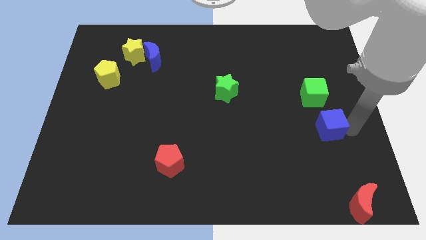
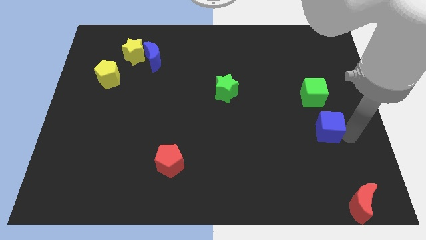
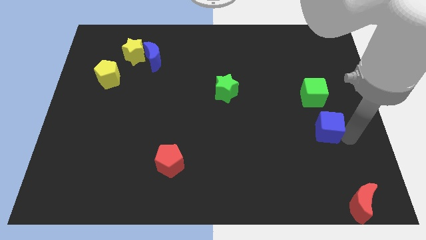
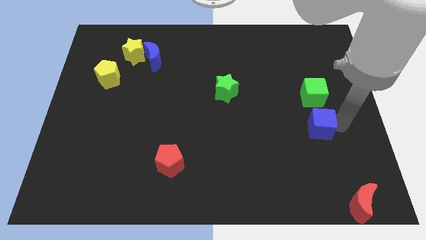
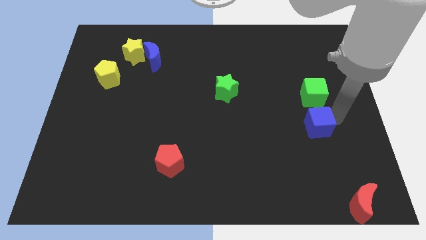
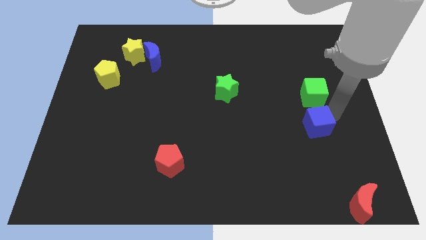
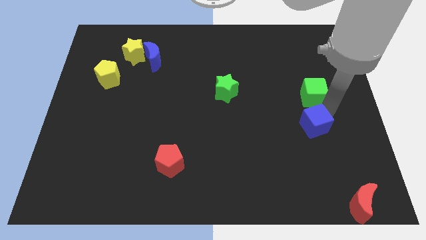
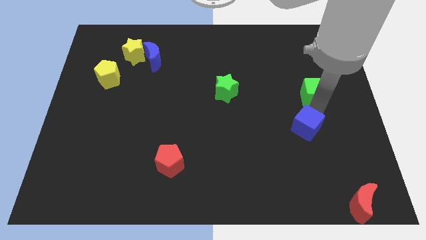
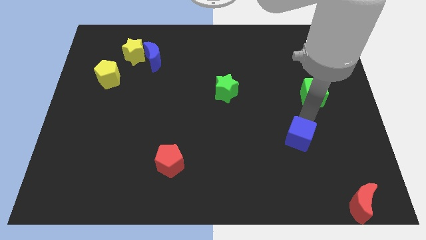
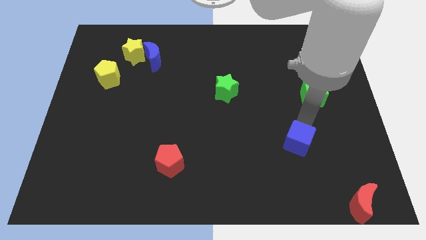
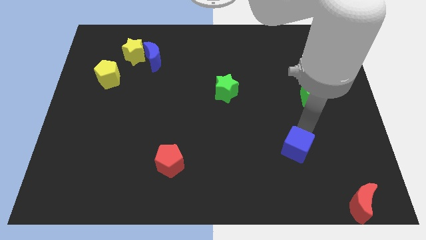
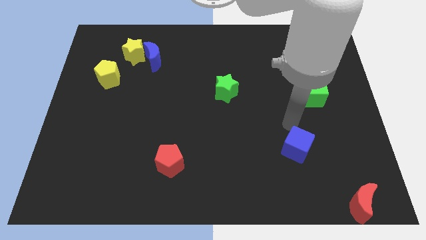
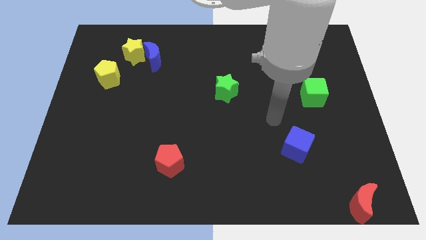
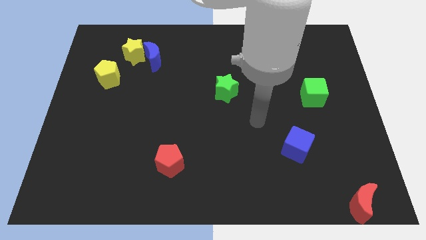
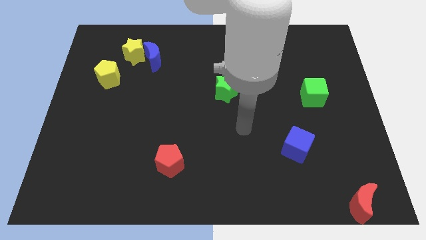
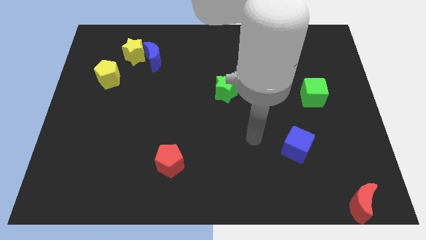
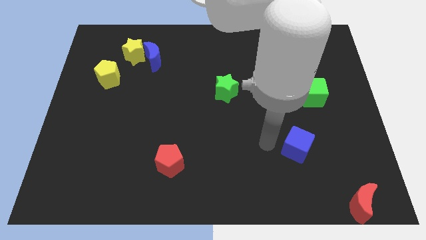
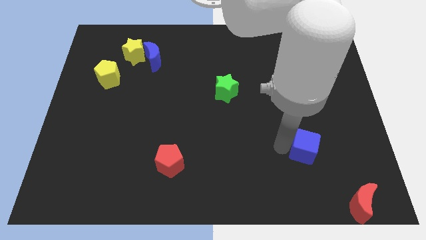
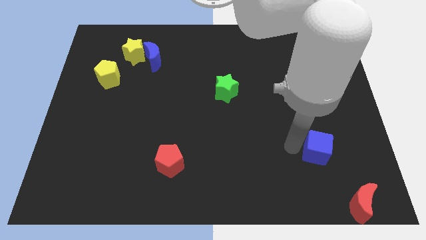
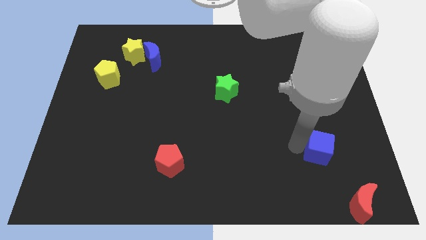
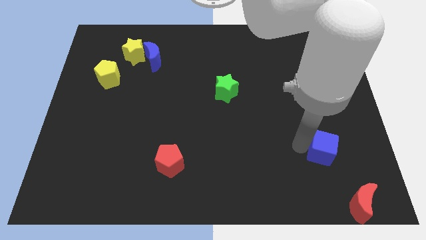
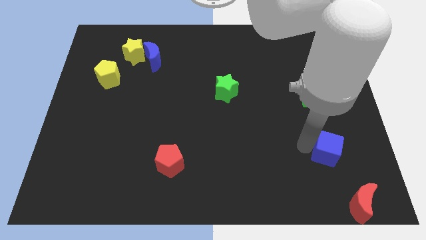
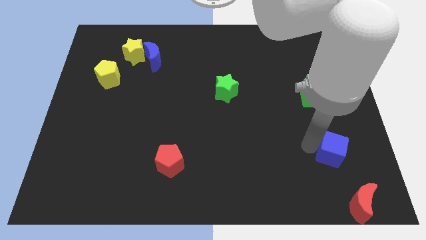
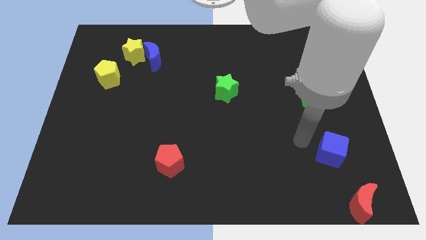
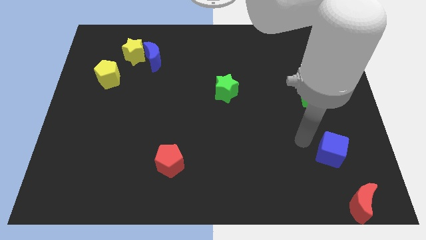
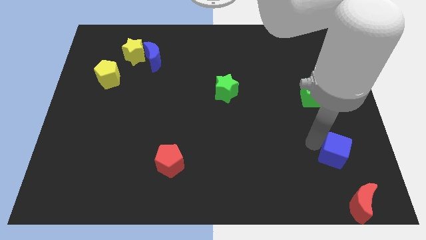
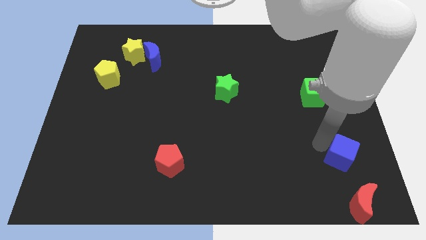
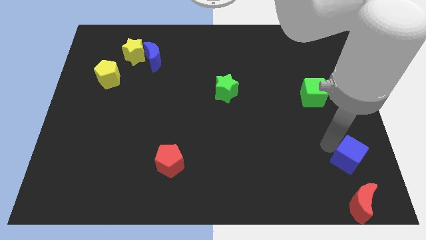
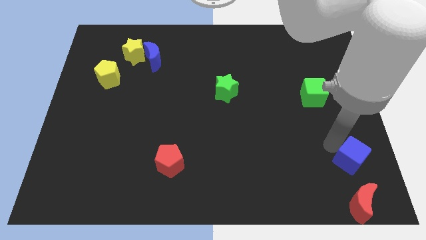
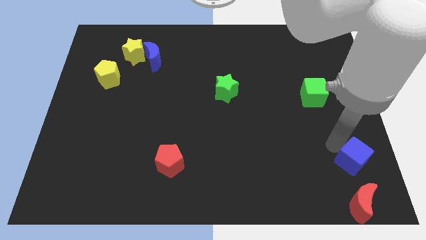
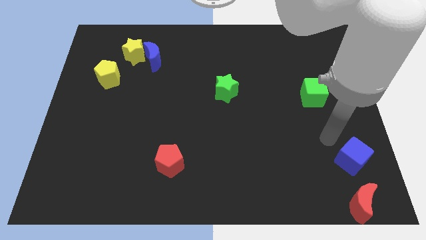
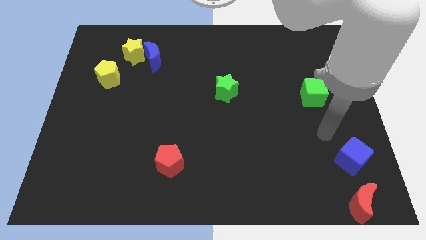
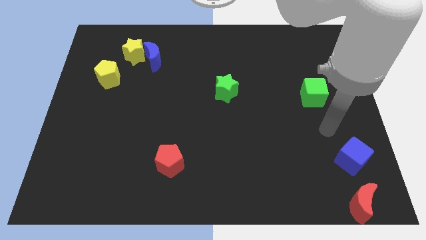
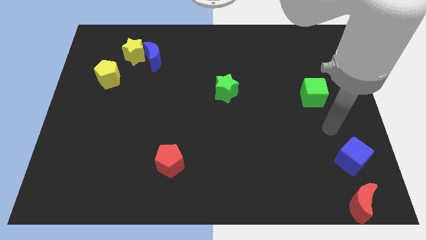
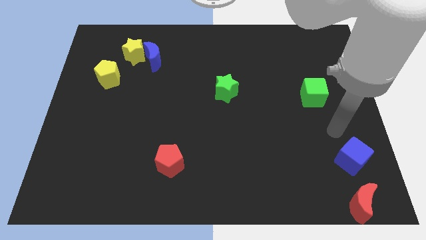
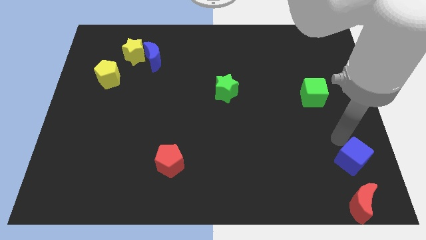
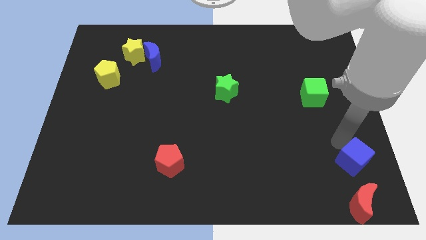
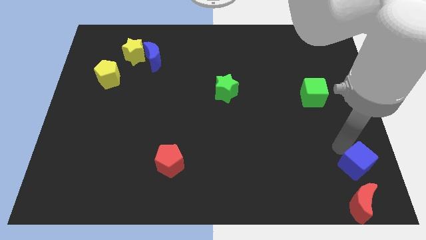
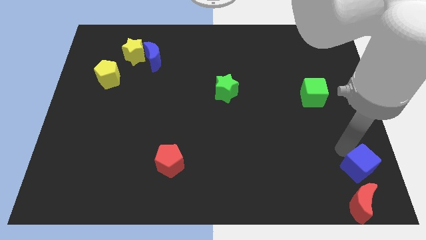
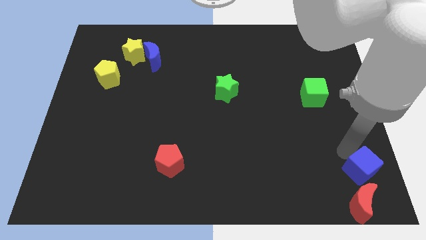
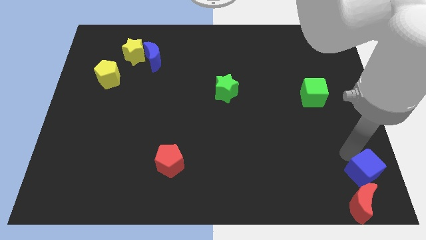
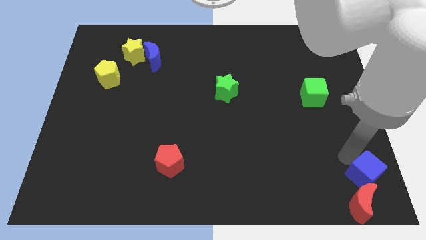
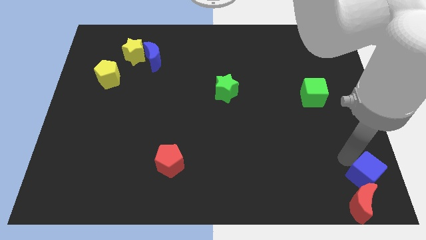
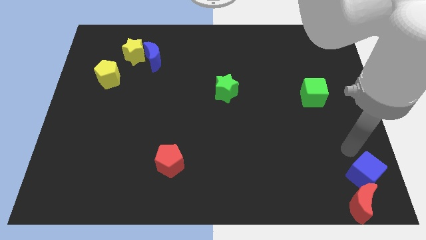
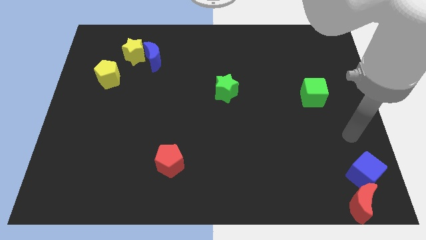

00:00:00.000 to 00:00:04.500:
place the blue cube to the top of the red crescent

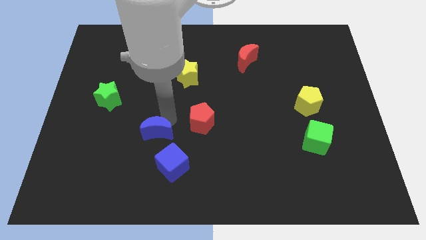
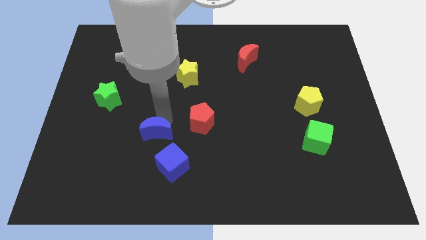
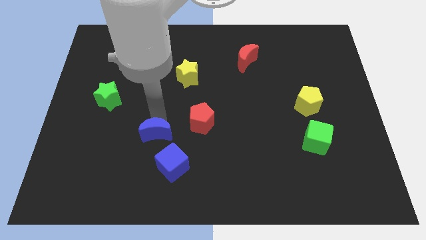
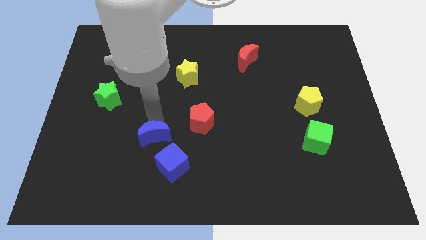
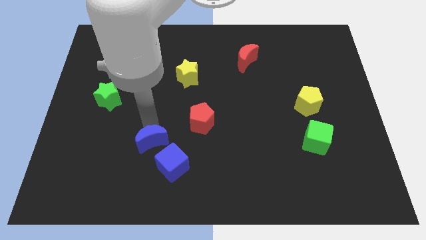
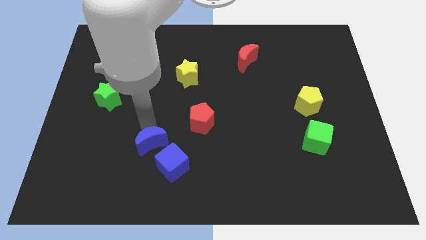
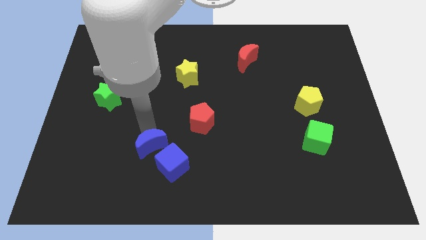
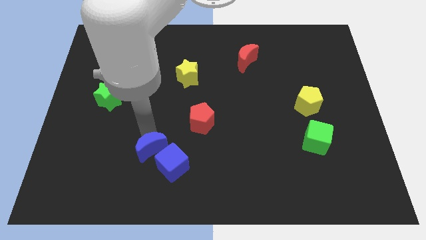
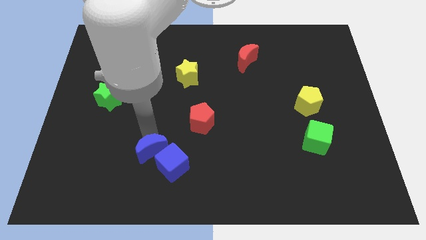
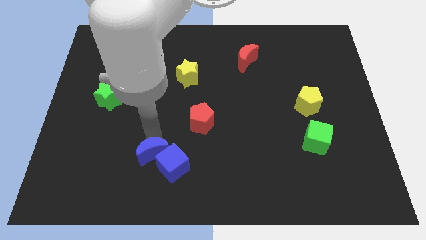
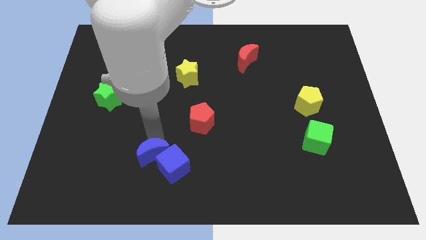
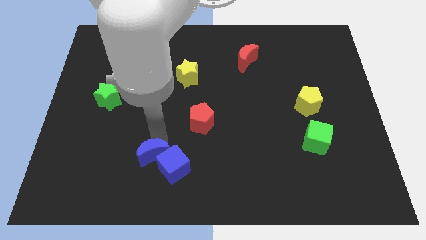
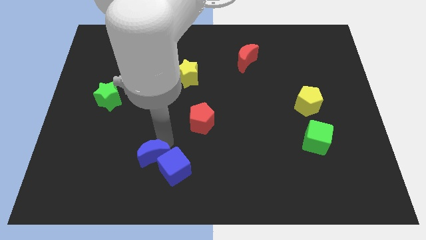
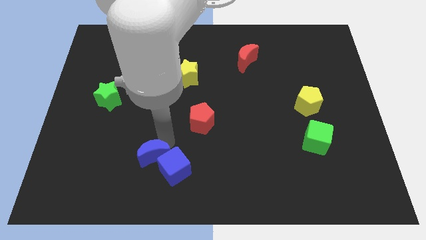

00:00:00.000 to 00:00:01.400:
push the blue crescent into the blue cube

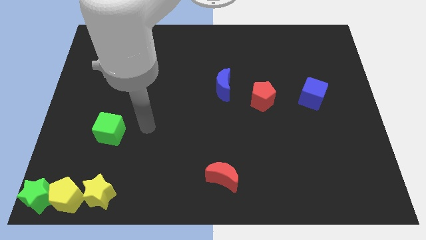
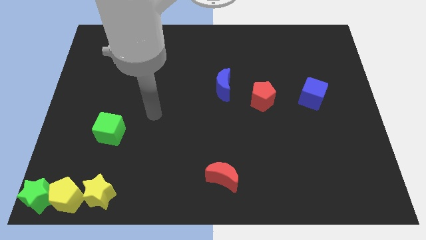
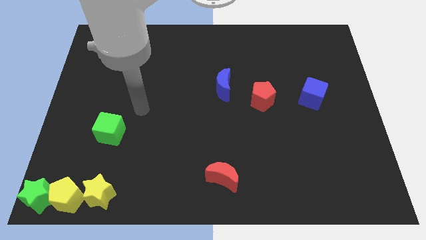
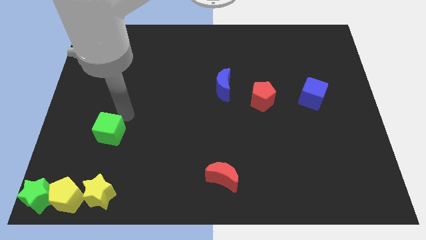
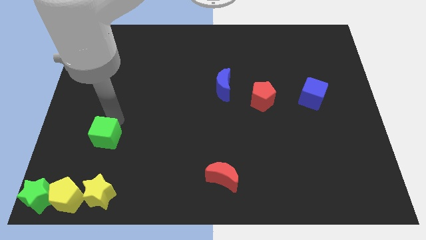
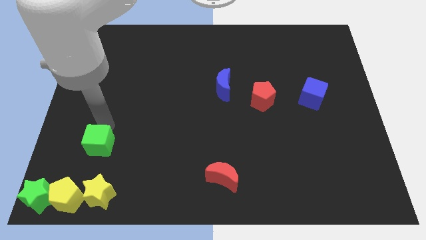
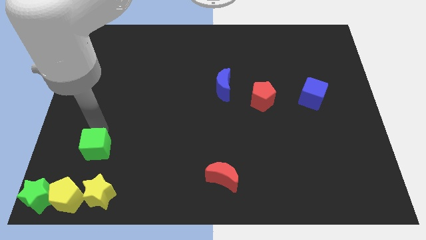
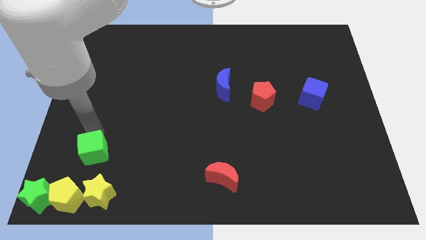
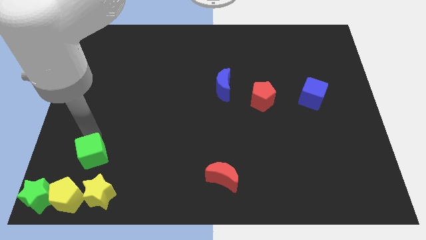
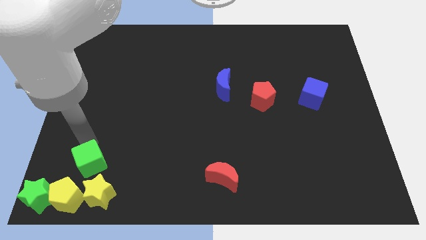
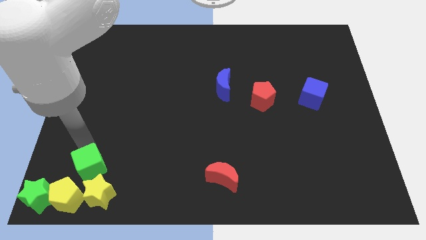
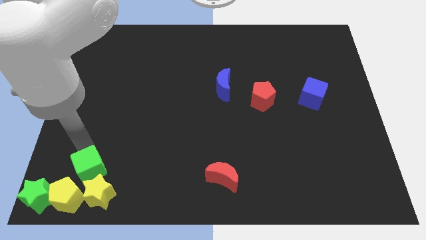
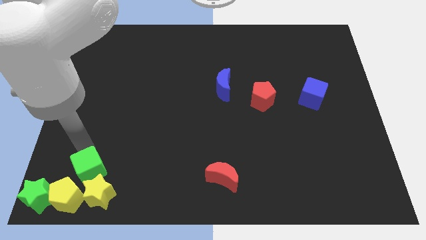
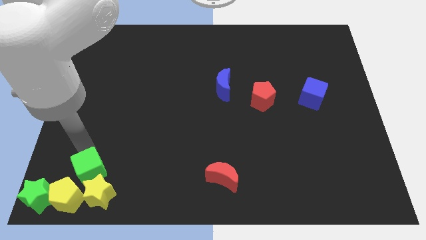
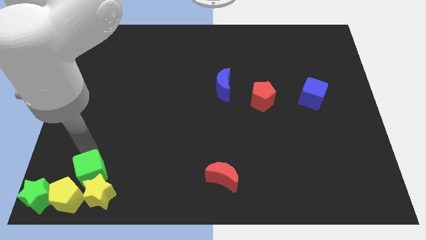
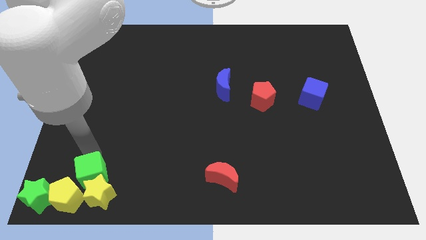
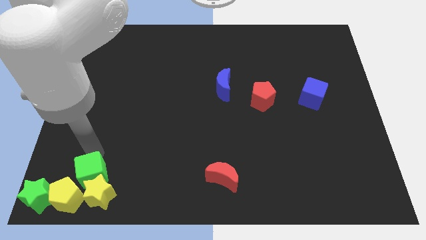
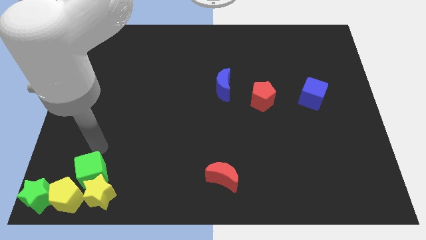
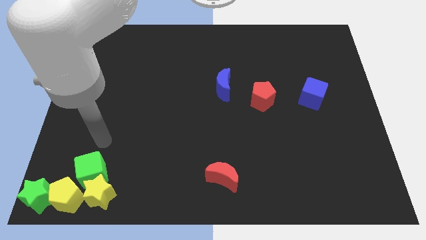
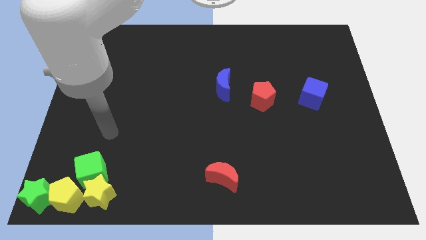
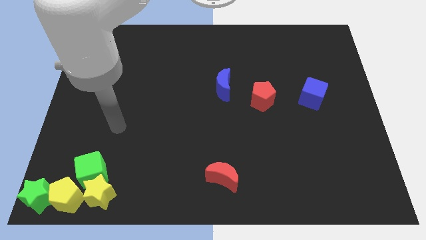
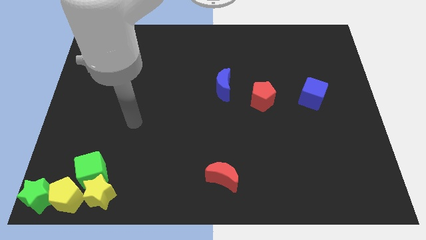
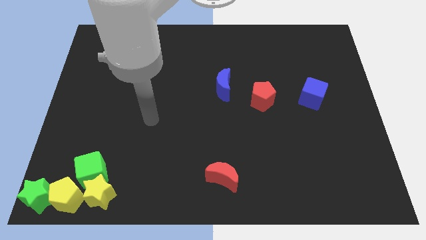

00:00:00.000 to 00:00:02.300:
put the green cube above the yellow star

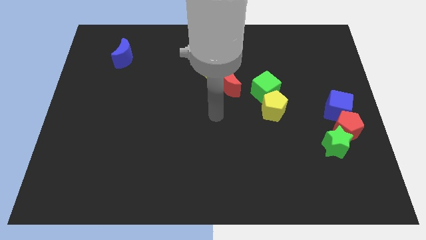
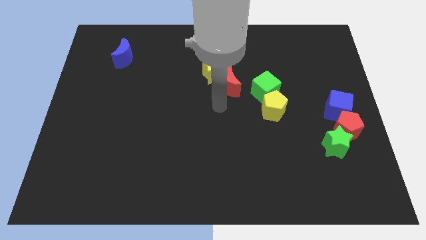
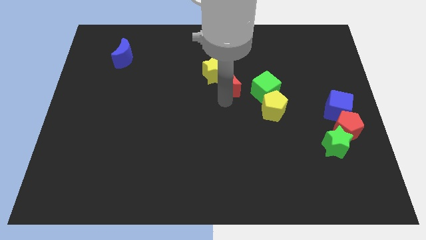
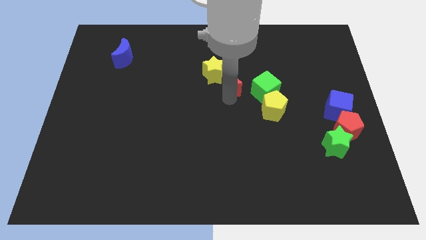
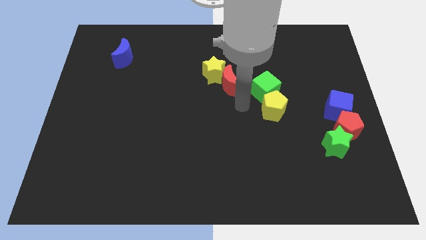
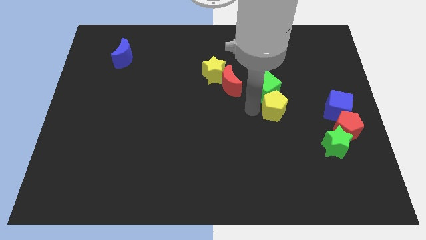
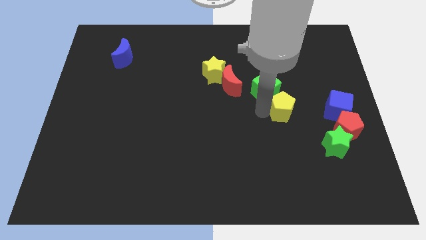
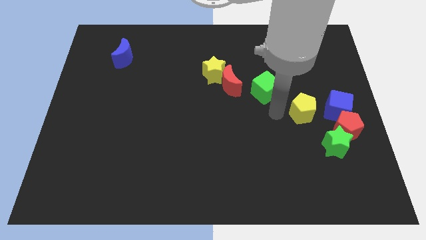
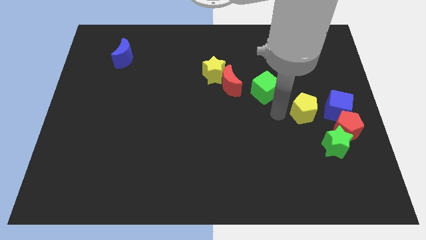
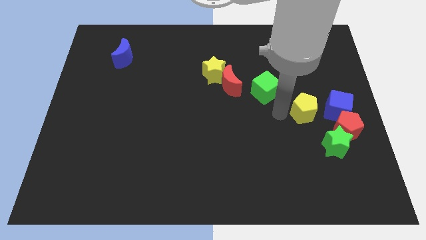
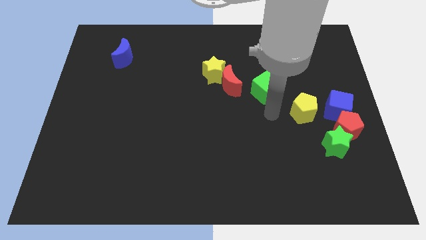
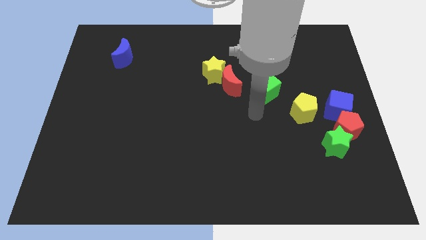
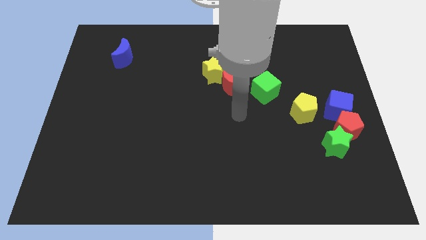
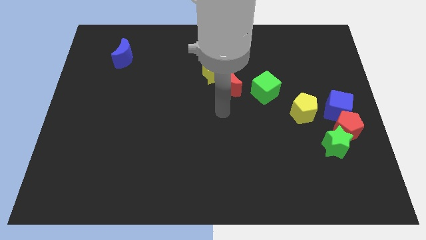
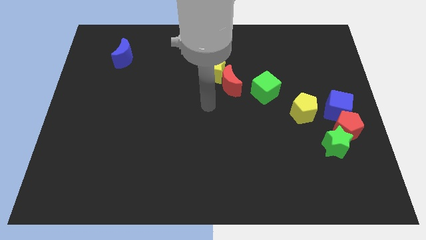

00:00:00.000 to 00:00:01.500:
slide the yellow pentagon away from the green cube
